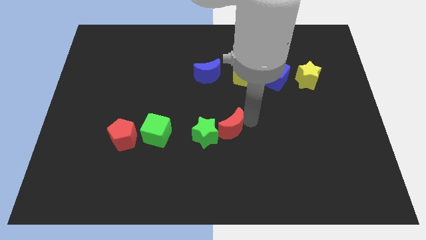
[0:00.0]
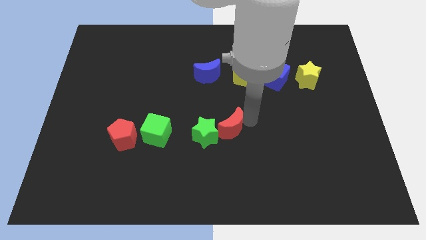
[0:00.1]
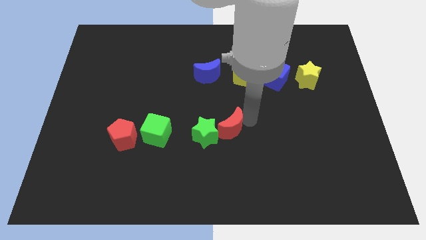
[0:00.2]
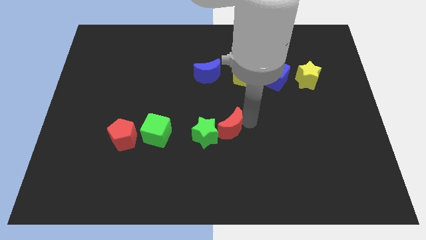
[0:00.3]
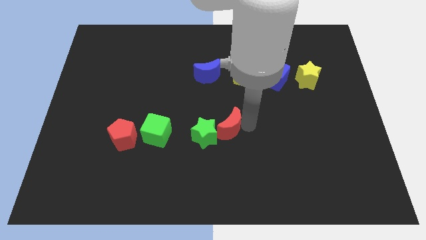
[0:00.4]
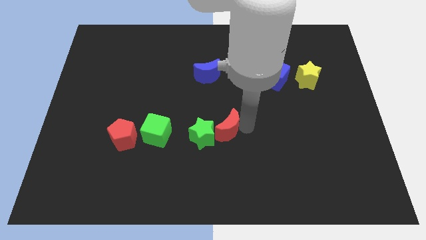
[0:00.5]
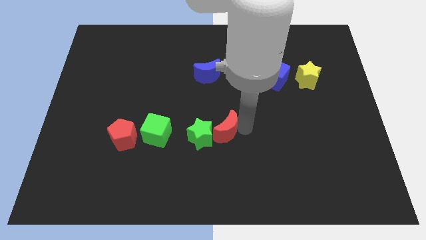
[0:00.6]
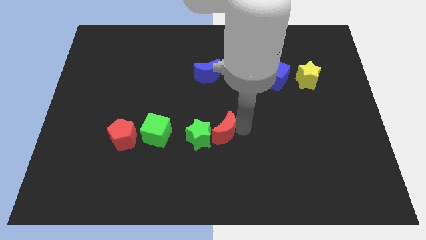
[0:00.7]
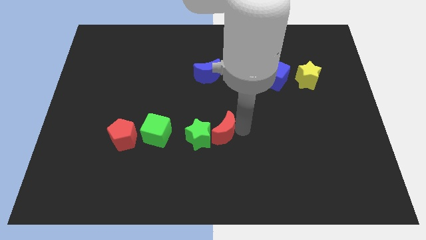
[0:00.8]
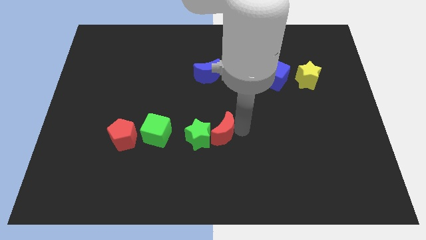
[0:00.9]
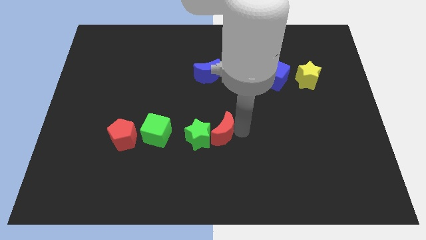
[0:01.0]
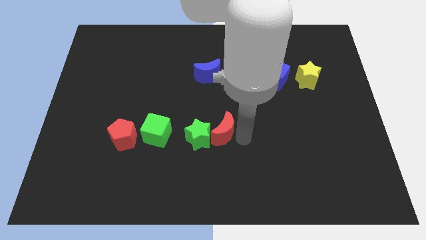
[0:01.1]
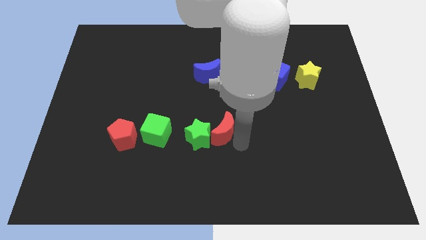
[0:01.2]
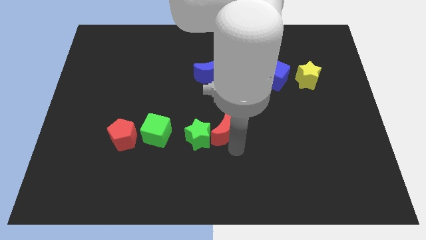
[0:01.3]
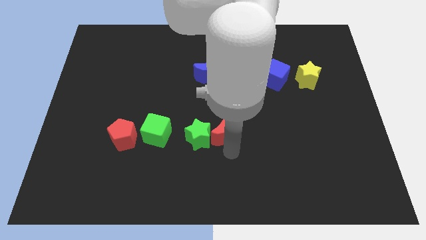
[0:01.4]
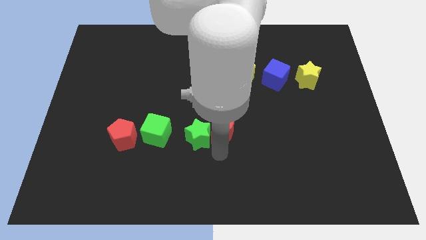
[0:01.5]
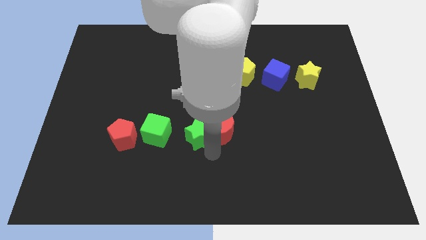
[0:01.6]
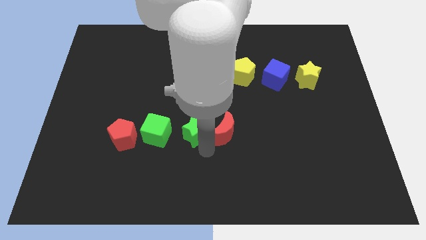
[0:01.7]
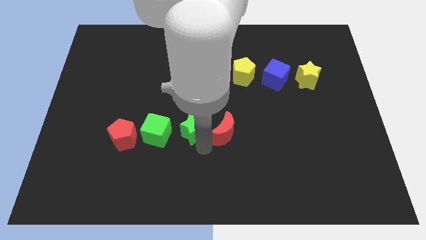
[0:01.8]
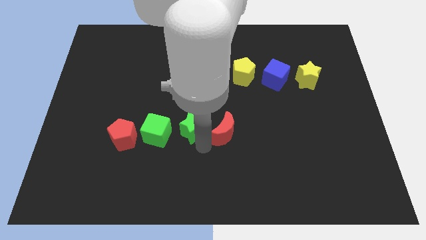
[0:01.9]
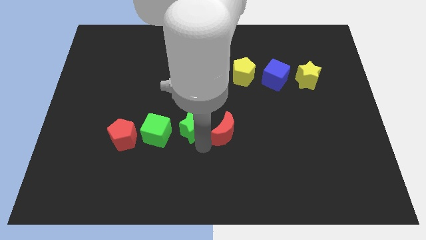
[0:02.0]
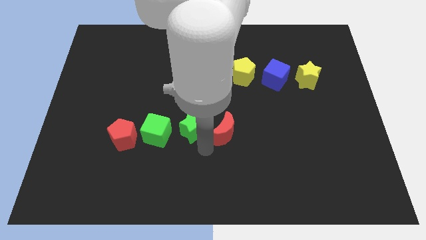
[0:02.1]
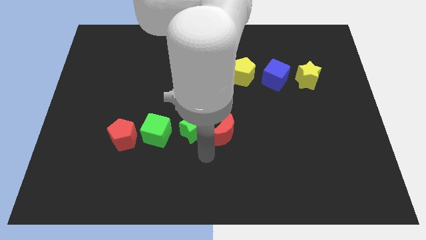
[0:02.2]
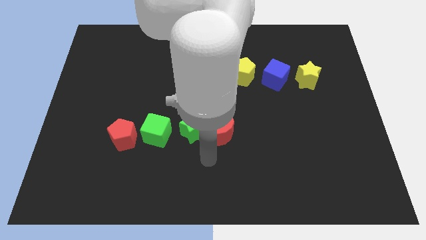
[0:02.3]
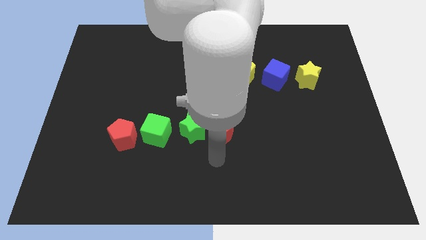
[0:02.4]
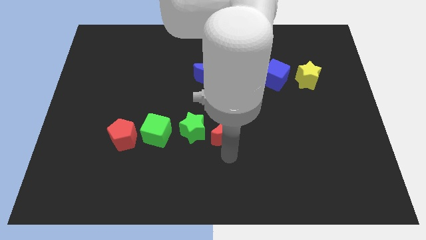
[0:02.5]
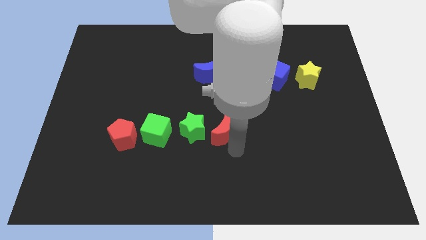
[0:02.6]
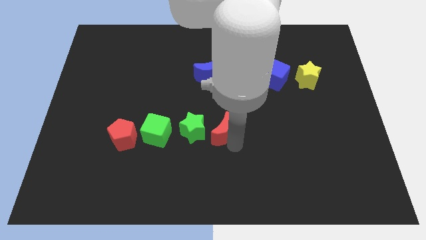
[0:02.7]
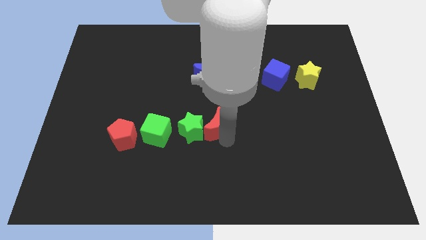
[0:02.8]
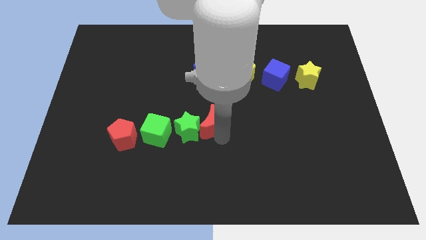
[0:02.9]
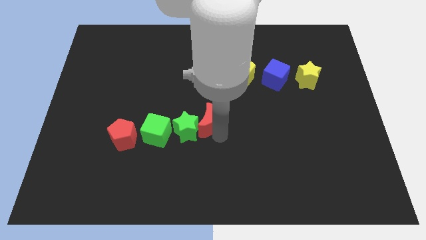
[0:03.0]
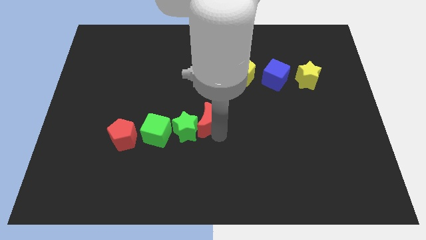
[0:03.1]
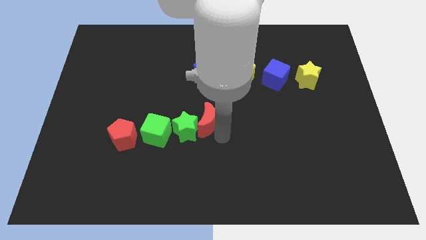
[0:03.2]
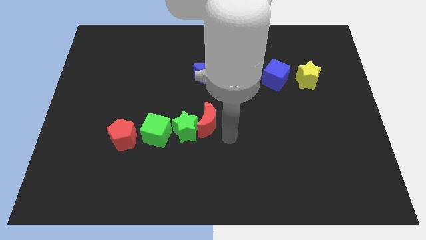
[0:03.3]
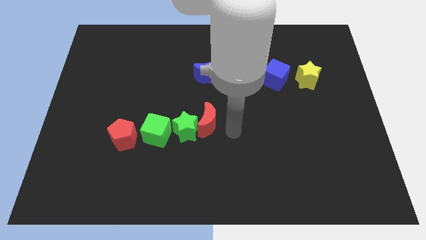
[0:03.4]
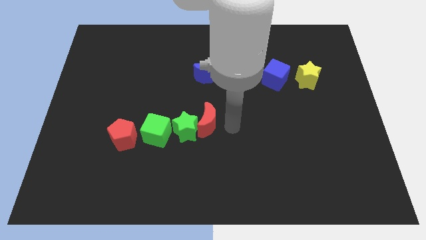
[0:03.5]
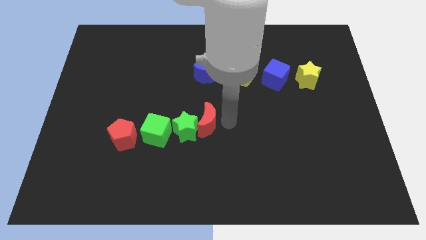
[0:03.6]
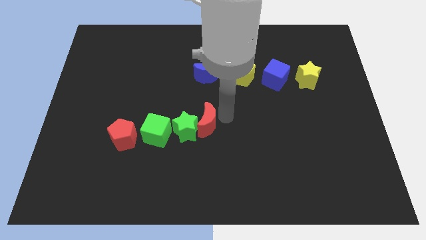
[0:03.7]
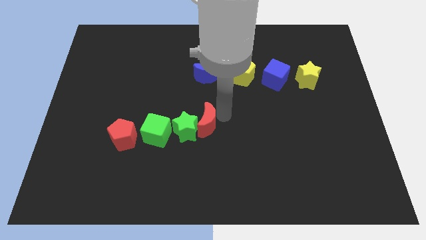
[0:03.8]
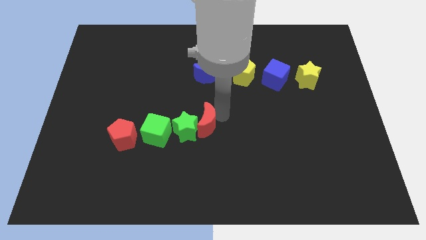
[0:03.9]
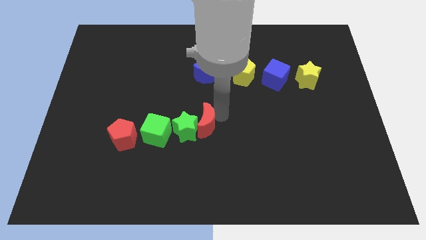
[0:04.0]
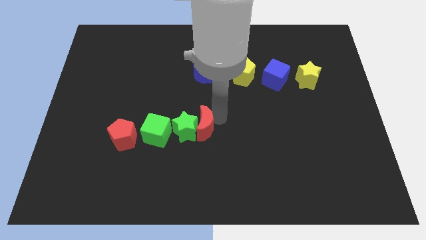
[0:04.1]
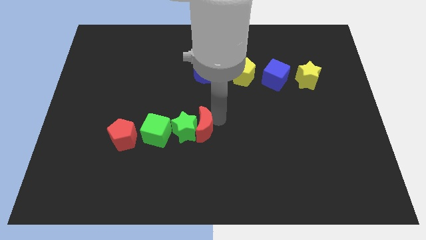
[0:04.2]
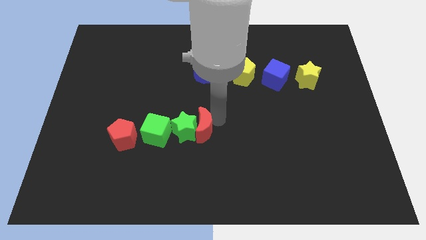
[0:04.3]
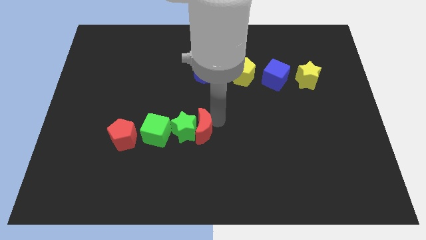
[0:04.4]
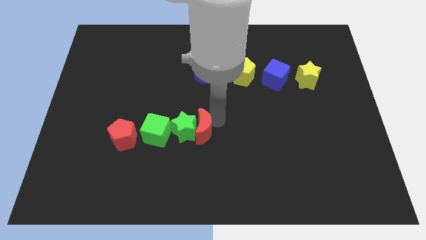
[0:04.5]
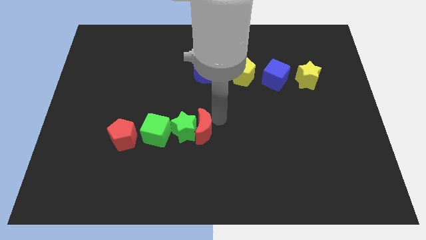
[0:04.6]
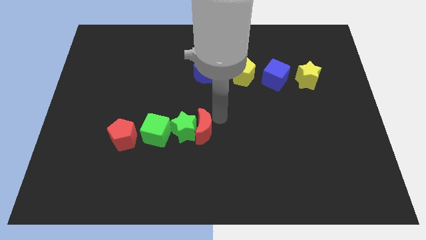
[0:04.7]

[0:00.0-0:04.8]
push the red moon and green star towards the green cube

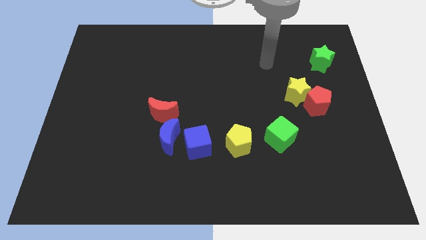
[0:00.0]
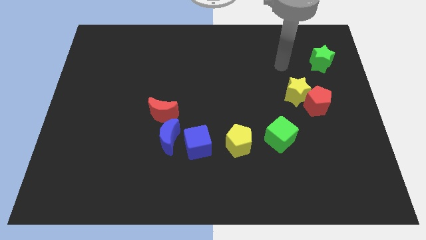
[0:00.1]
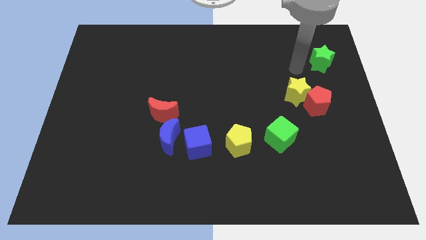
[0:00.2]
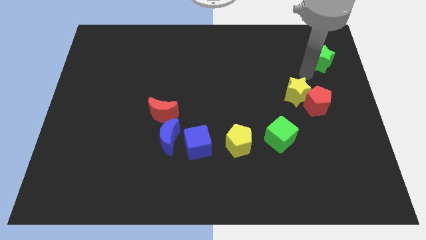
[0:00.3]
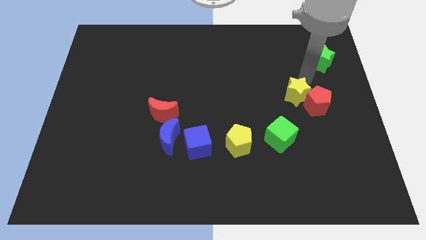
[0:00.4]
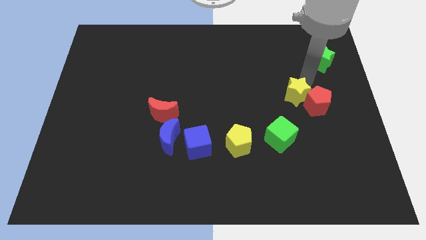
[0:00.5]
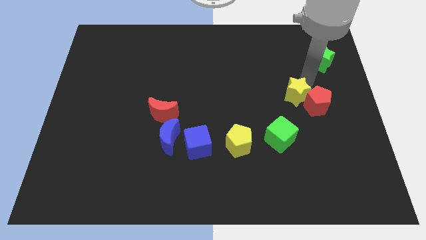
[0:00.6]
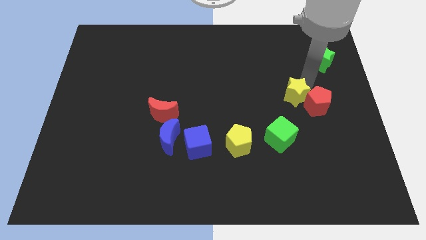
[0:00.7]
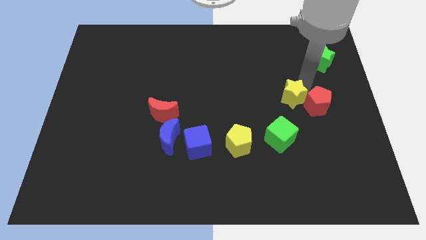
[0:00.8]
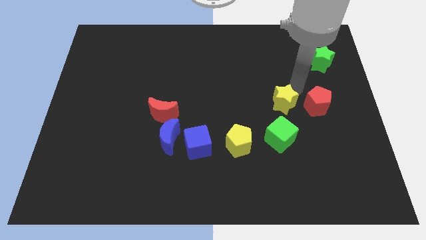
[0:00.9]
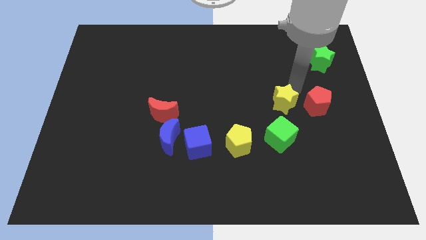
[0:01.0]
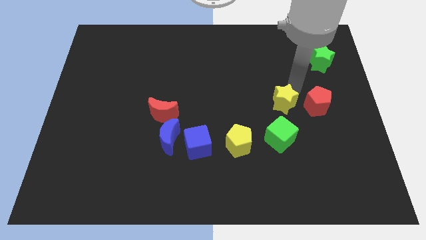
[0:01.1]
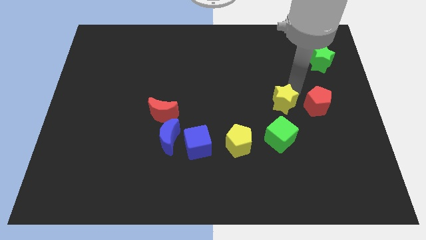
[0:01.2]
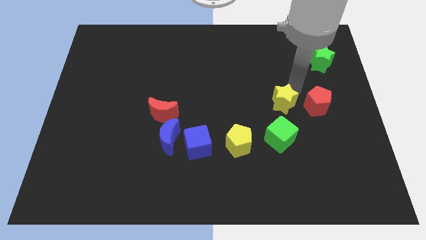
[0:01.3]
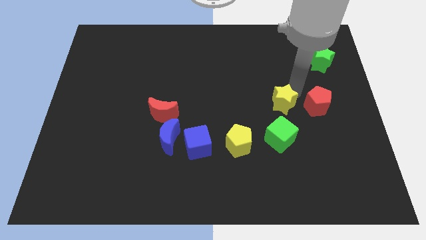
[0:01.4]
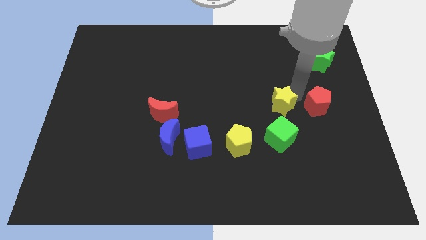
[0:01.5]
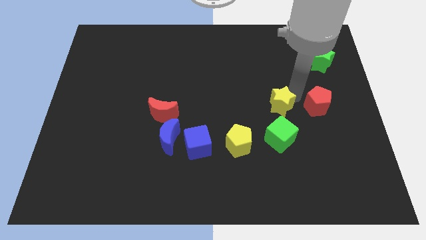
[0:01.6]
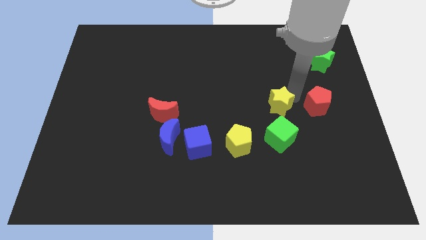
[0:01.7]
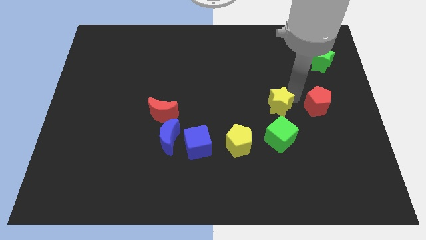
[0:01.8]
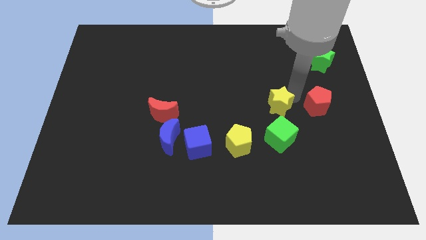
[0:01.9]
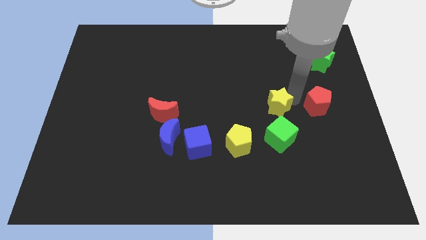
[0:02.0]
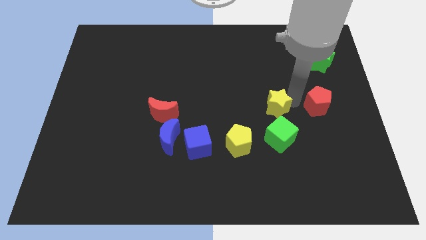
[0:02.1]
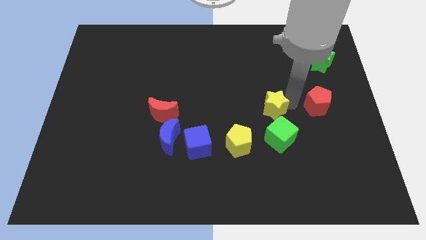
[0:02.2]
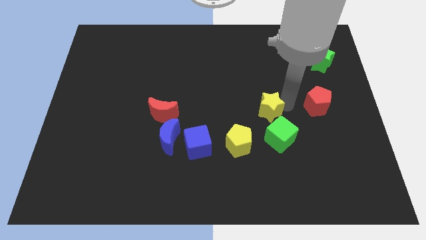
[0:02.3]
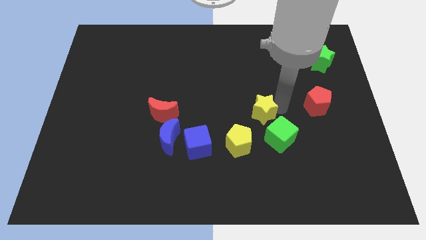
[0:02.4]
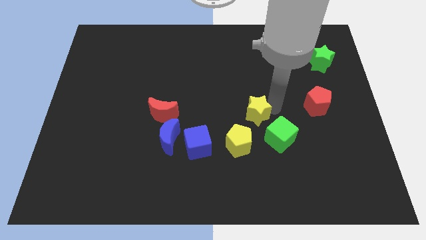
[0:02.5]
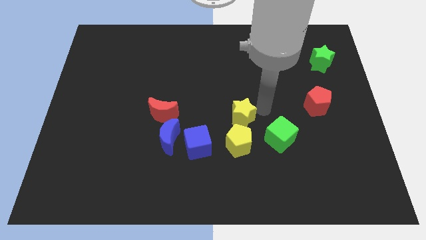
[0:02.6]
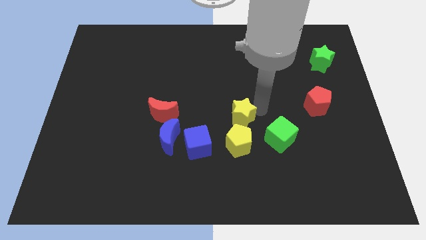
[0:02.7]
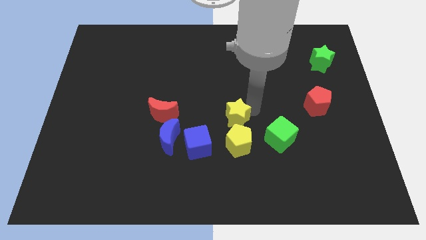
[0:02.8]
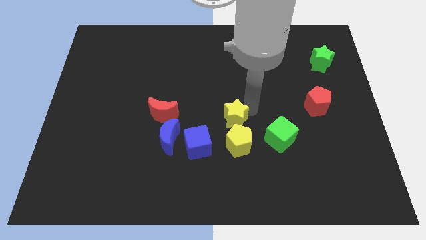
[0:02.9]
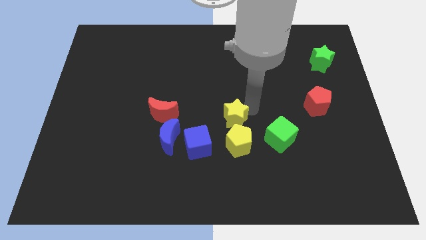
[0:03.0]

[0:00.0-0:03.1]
push the yellow star to the top of the yellow pentagon

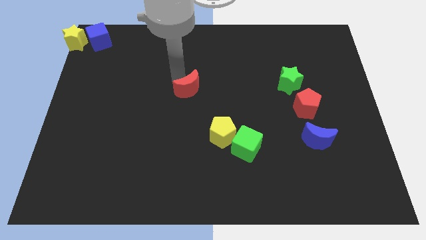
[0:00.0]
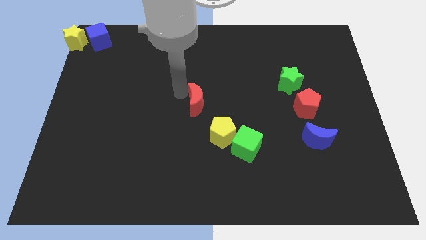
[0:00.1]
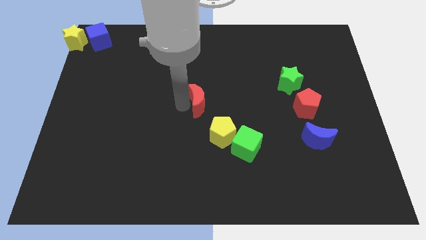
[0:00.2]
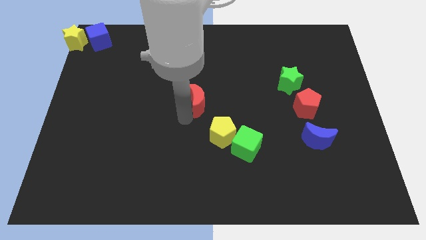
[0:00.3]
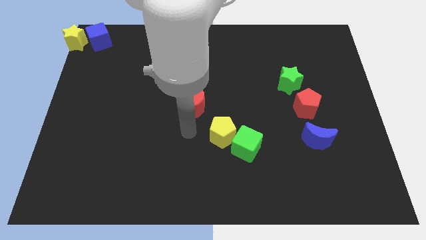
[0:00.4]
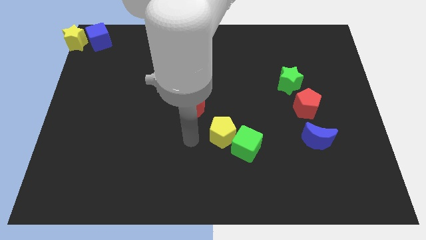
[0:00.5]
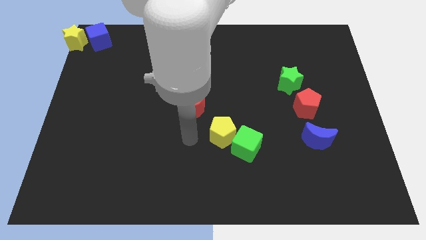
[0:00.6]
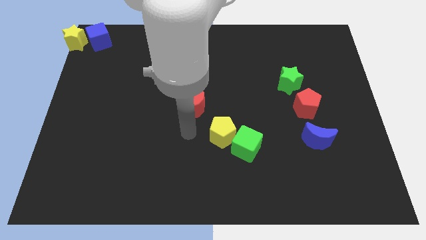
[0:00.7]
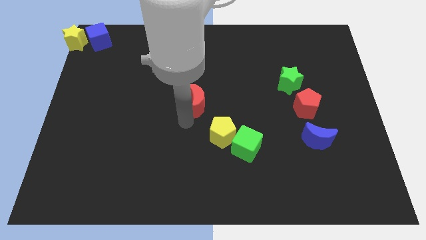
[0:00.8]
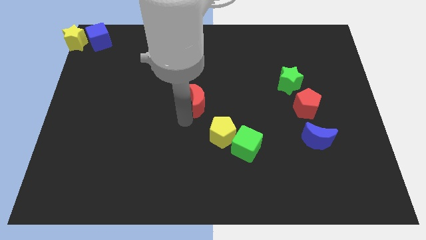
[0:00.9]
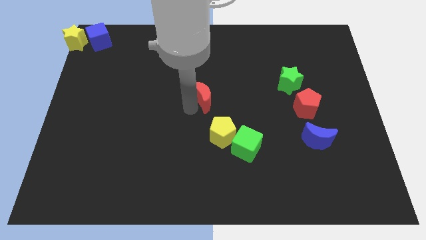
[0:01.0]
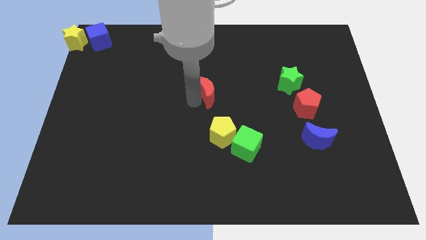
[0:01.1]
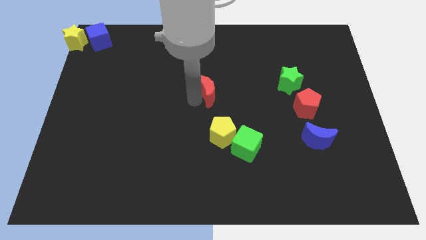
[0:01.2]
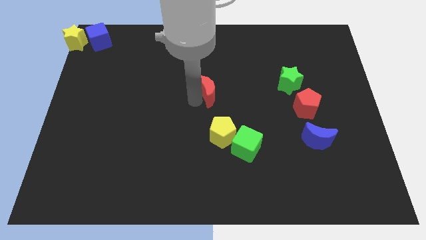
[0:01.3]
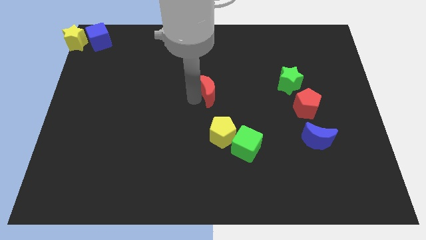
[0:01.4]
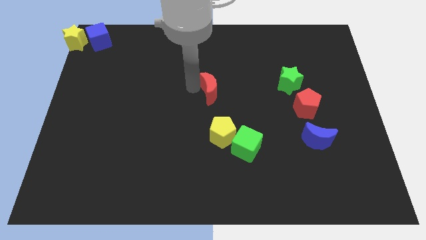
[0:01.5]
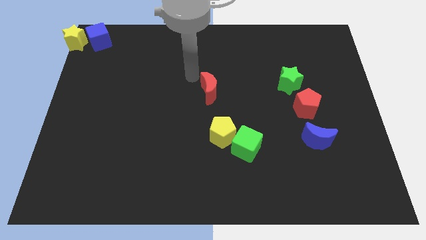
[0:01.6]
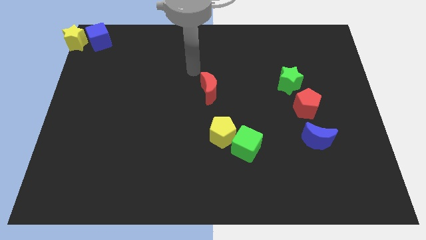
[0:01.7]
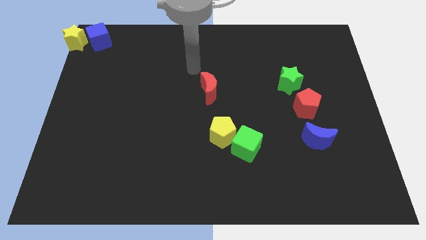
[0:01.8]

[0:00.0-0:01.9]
slide the red crescent to the center of the board
